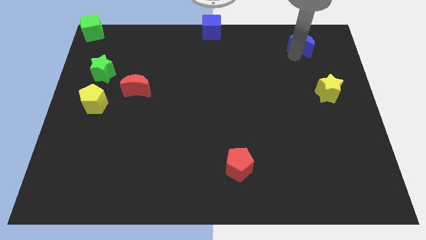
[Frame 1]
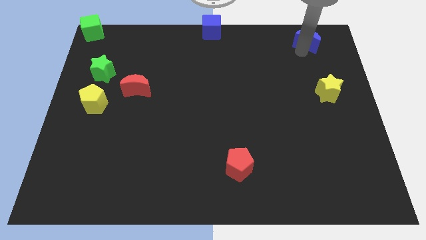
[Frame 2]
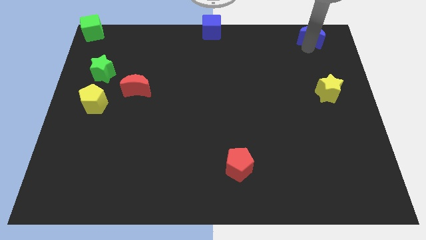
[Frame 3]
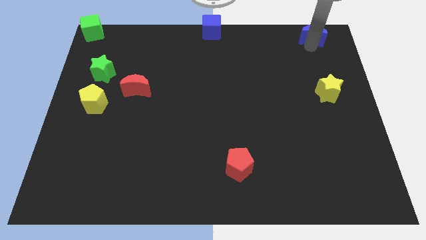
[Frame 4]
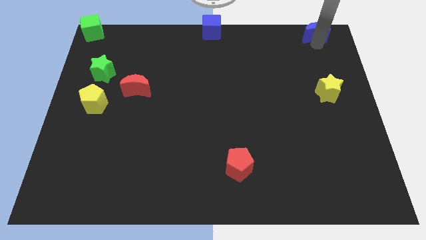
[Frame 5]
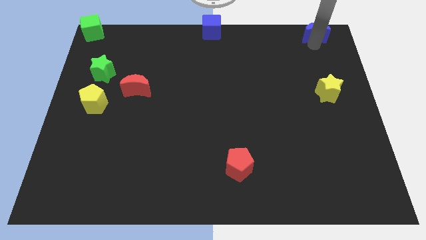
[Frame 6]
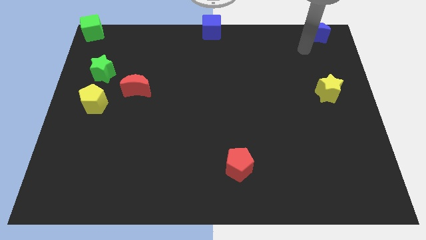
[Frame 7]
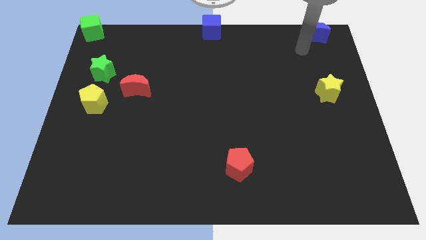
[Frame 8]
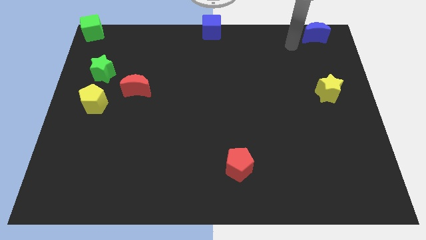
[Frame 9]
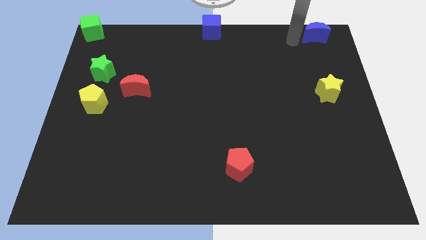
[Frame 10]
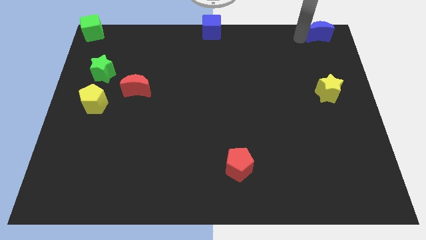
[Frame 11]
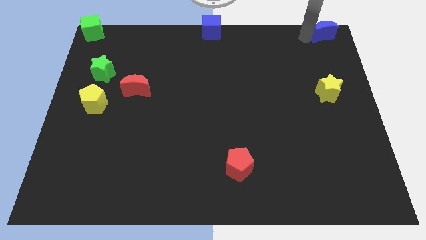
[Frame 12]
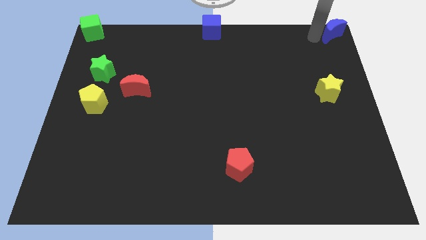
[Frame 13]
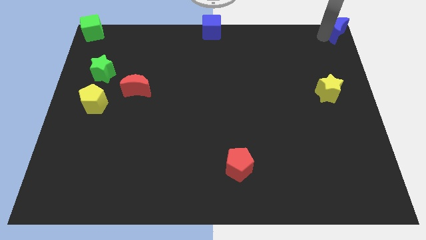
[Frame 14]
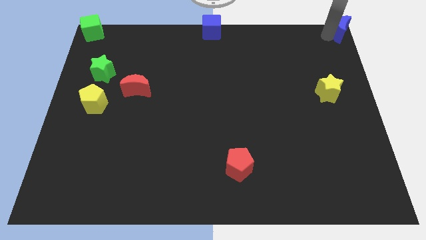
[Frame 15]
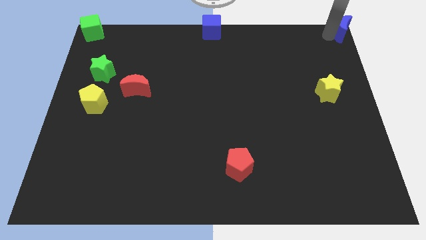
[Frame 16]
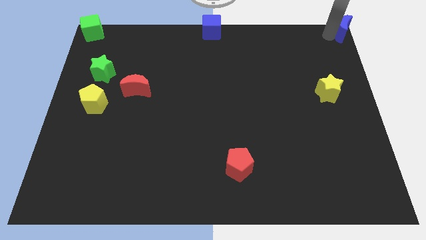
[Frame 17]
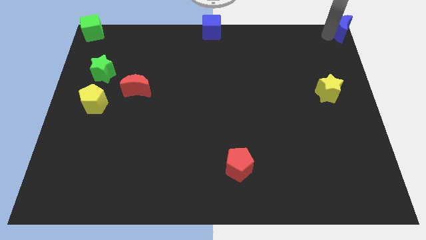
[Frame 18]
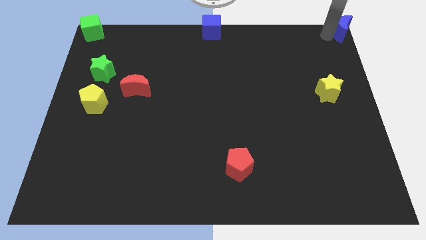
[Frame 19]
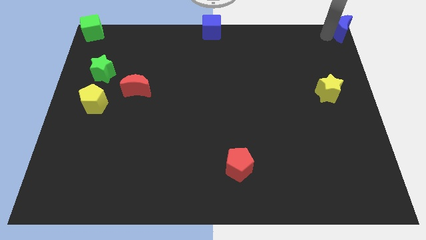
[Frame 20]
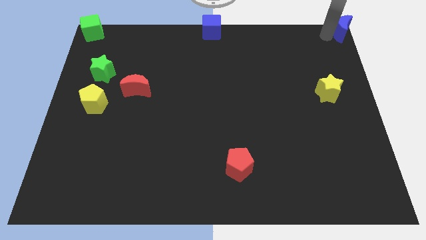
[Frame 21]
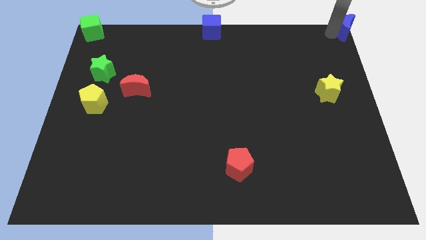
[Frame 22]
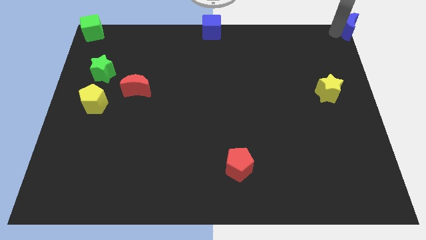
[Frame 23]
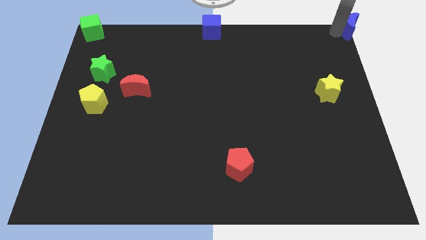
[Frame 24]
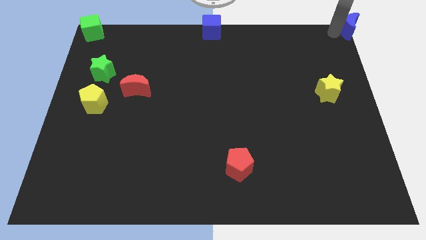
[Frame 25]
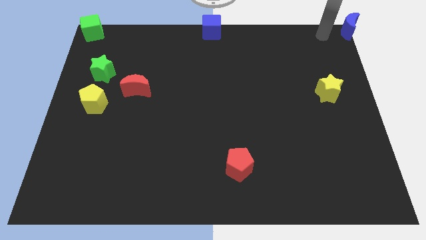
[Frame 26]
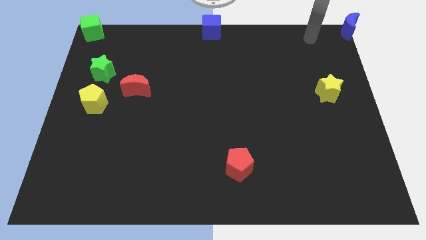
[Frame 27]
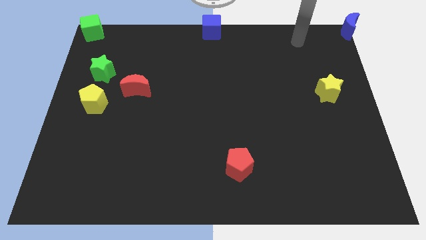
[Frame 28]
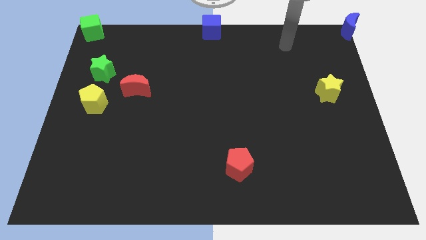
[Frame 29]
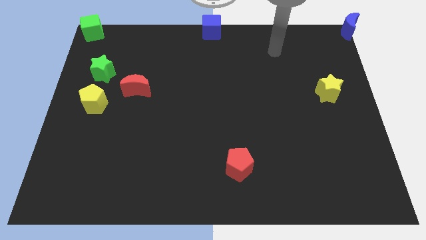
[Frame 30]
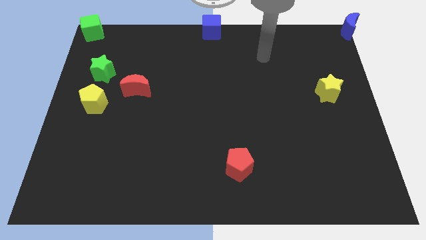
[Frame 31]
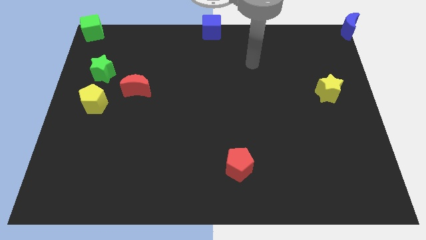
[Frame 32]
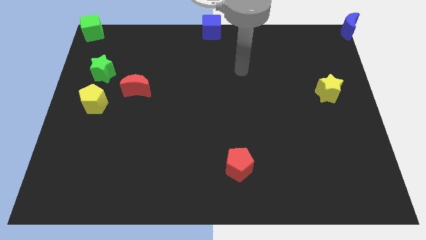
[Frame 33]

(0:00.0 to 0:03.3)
place the blue crescent on right top corner of the board

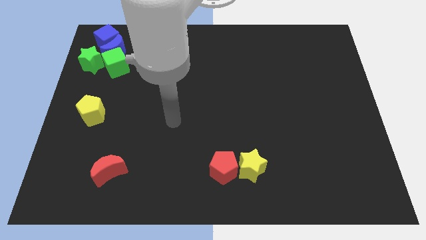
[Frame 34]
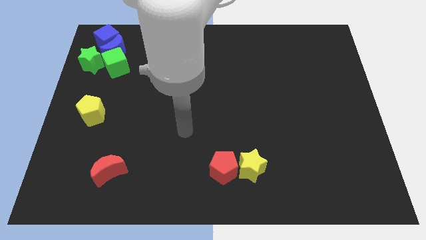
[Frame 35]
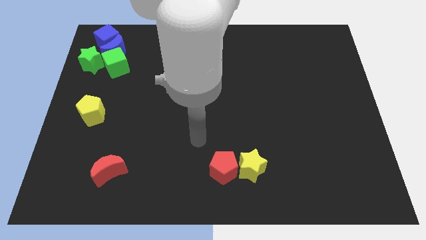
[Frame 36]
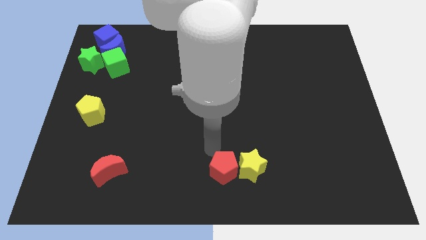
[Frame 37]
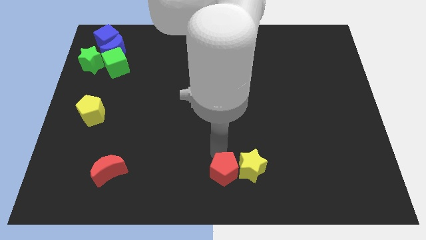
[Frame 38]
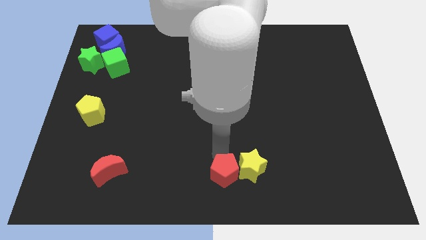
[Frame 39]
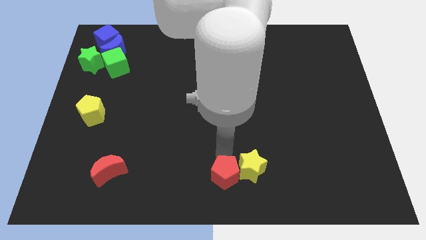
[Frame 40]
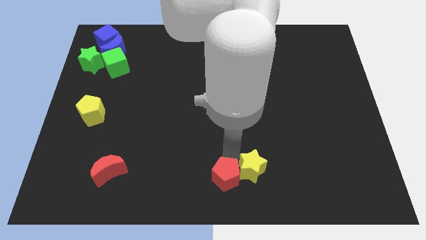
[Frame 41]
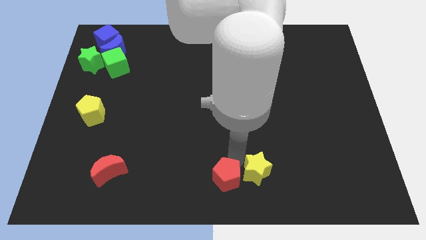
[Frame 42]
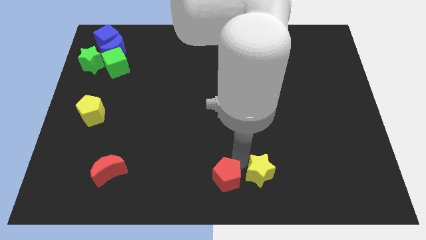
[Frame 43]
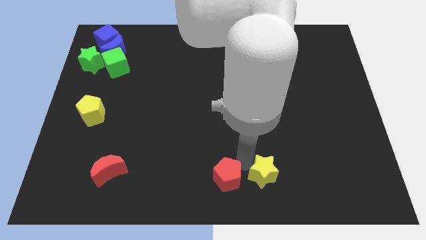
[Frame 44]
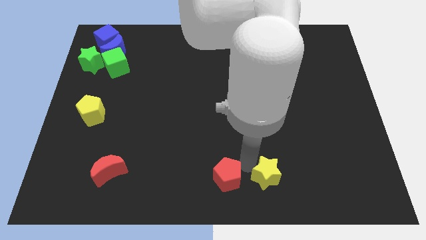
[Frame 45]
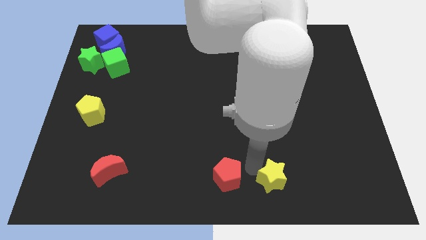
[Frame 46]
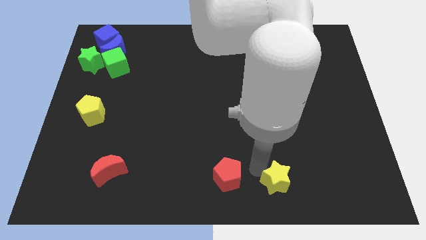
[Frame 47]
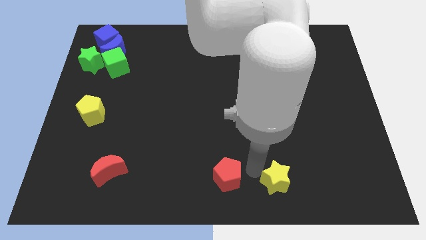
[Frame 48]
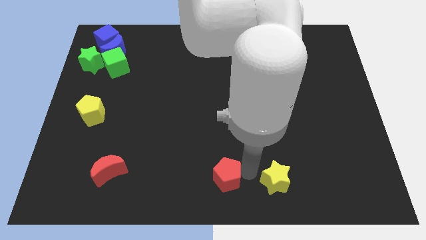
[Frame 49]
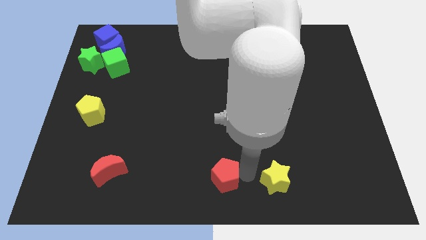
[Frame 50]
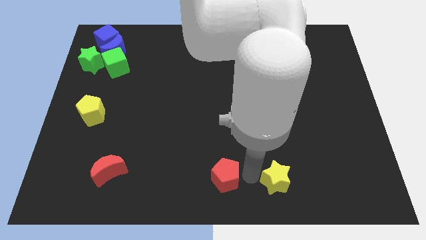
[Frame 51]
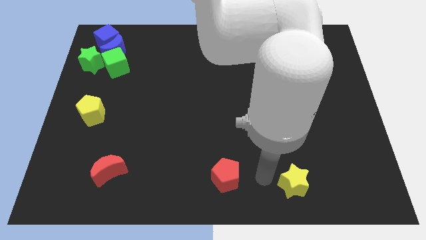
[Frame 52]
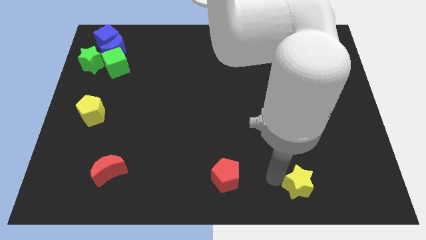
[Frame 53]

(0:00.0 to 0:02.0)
separate the yellow star from the red pentagon

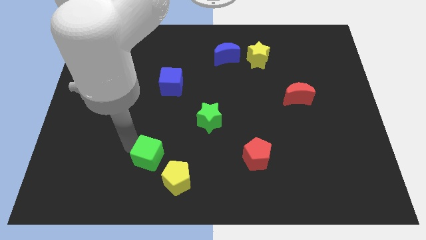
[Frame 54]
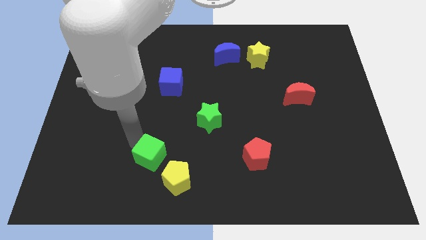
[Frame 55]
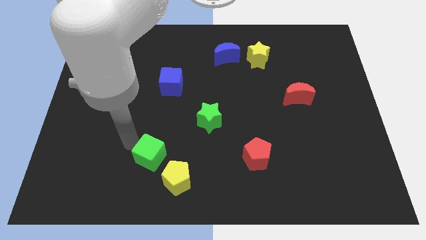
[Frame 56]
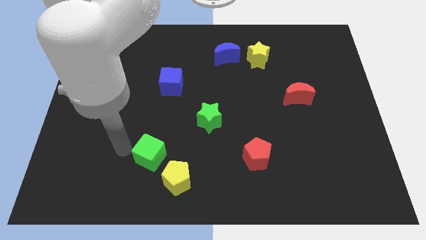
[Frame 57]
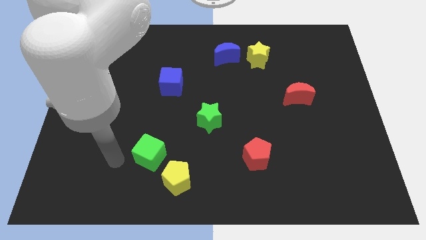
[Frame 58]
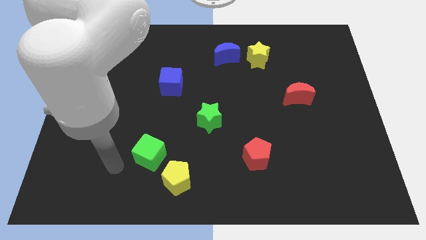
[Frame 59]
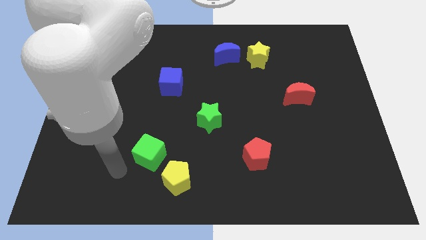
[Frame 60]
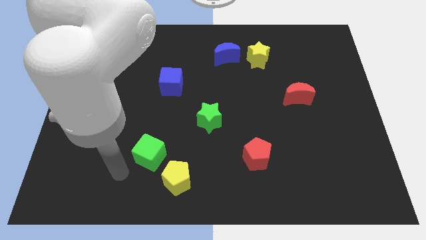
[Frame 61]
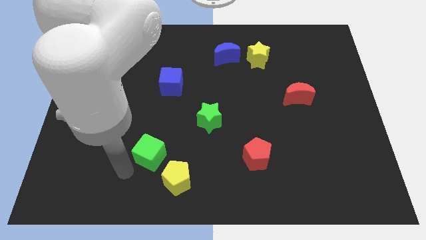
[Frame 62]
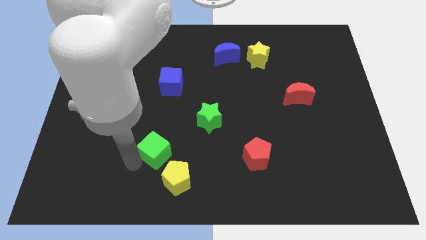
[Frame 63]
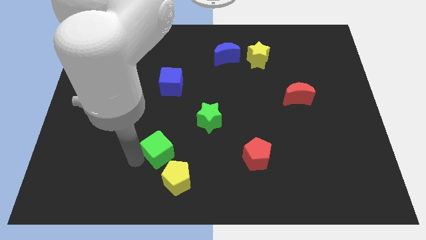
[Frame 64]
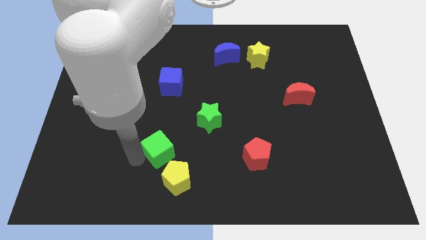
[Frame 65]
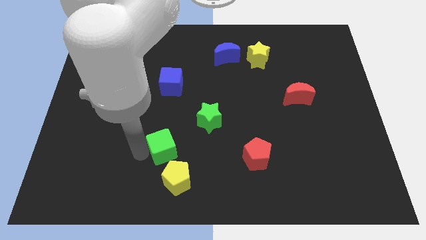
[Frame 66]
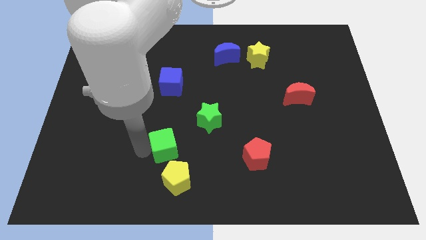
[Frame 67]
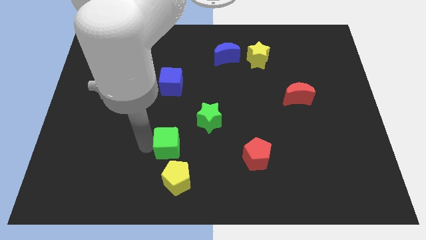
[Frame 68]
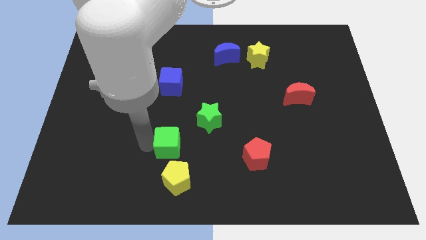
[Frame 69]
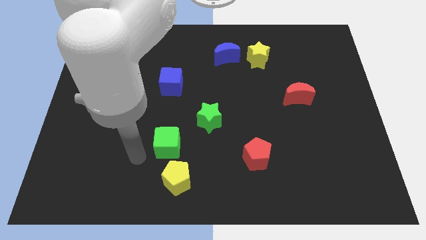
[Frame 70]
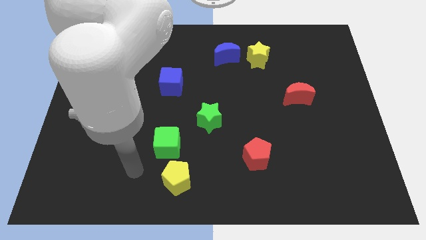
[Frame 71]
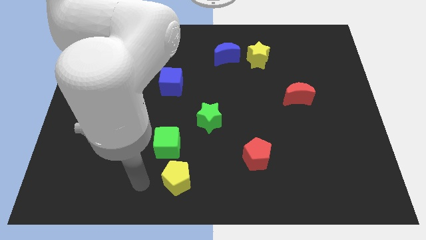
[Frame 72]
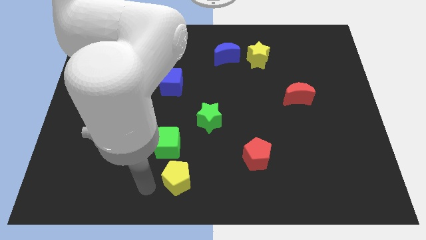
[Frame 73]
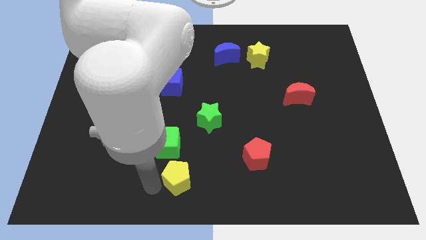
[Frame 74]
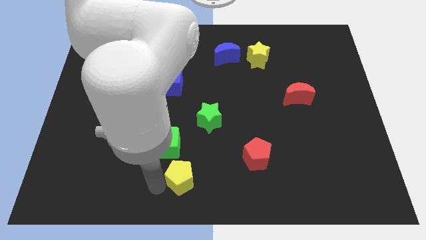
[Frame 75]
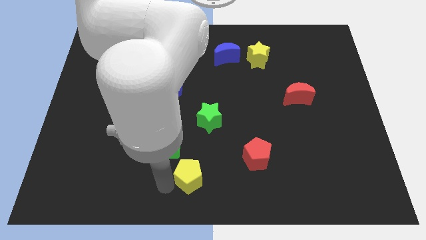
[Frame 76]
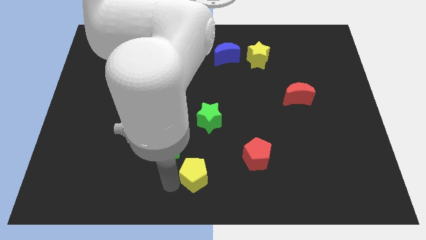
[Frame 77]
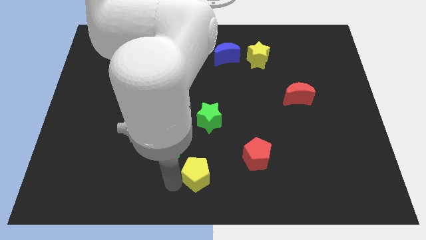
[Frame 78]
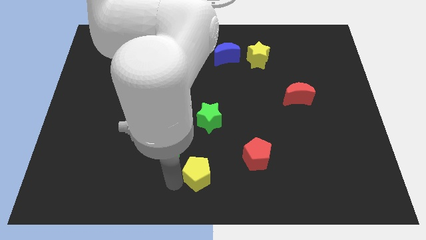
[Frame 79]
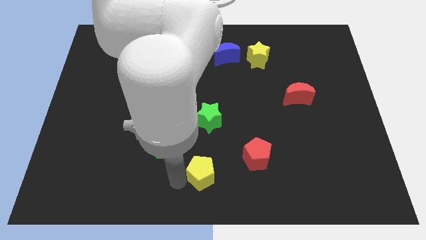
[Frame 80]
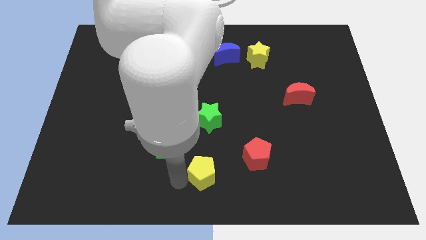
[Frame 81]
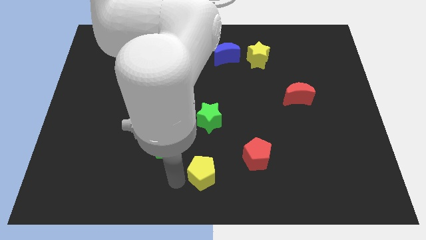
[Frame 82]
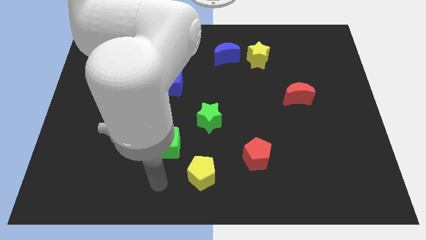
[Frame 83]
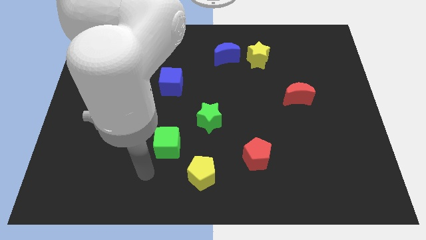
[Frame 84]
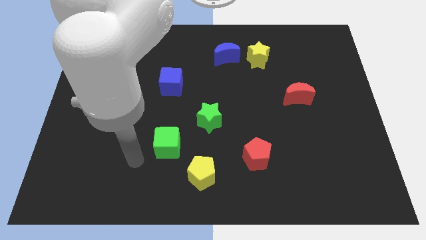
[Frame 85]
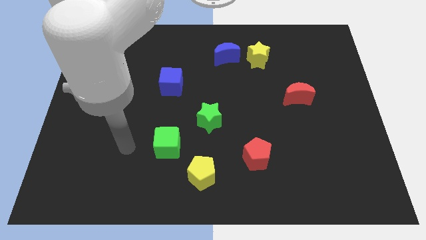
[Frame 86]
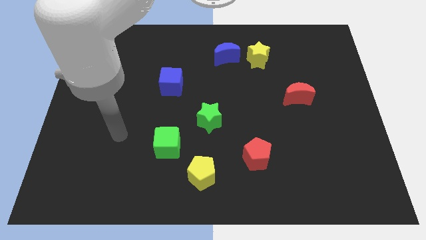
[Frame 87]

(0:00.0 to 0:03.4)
place your arm at the left of the green cube

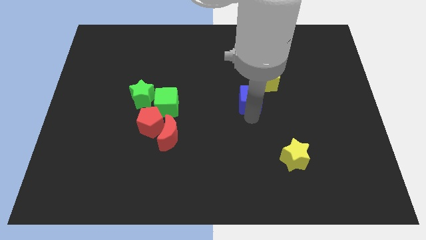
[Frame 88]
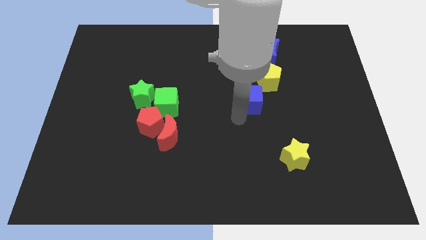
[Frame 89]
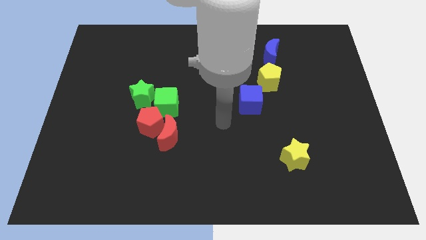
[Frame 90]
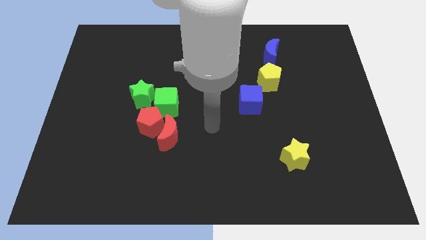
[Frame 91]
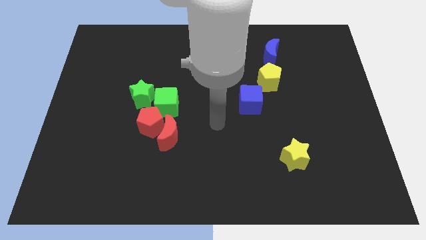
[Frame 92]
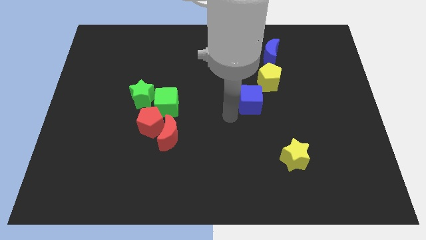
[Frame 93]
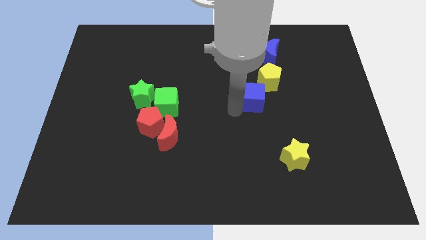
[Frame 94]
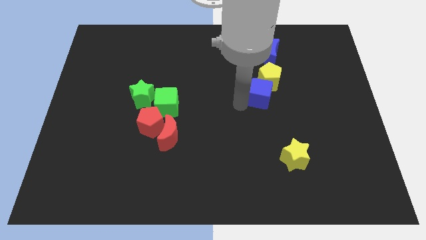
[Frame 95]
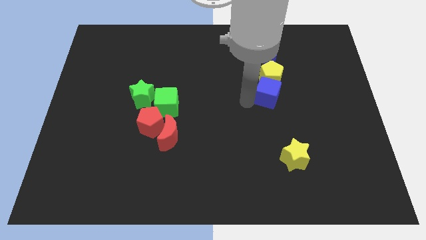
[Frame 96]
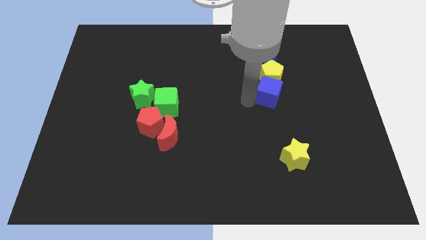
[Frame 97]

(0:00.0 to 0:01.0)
place blue cube below yellow pentagon
